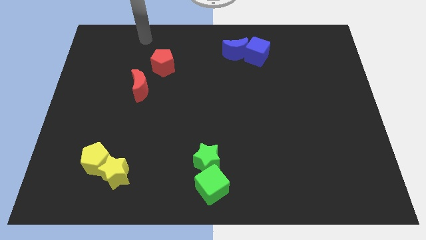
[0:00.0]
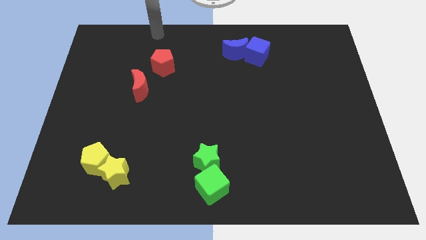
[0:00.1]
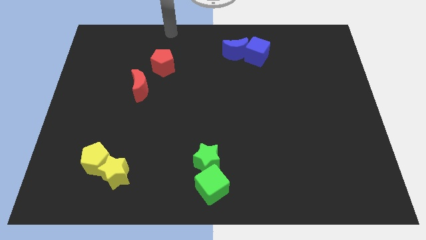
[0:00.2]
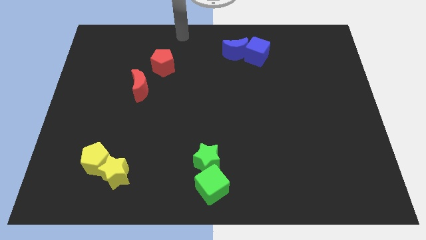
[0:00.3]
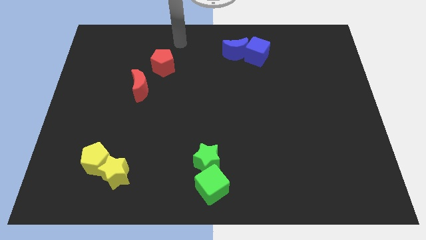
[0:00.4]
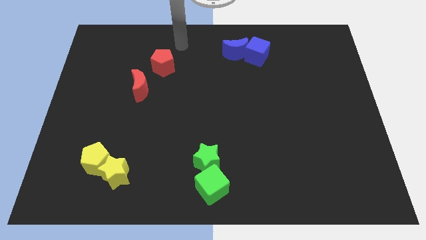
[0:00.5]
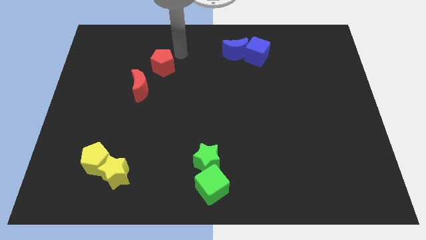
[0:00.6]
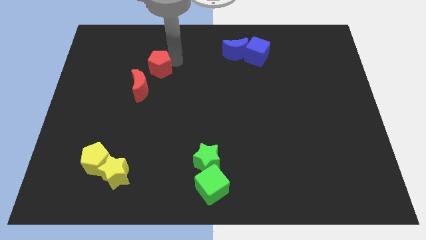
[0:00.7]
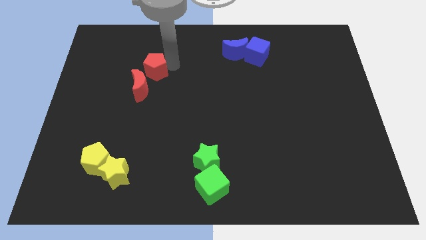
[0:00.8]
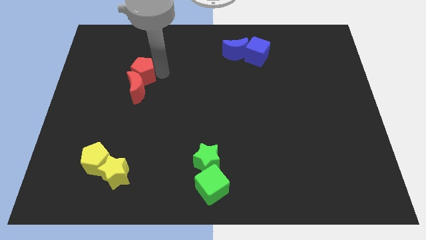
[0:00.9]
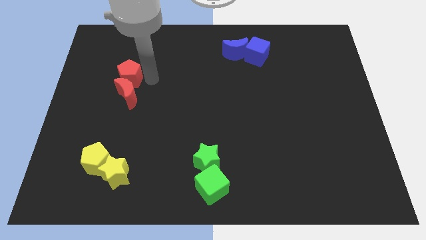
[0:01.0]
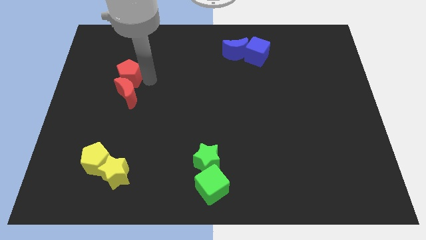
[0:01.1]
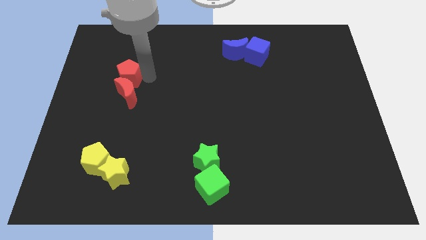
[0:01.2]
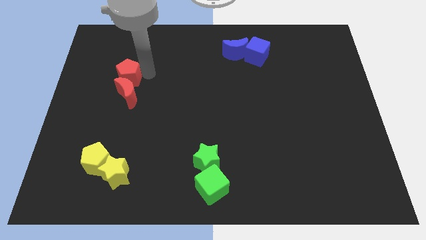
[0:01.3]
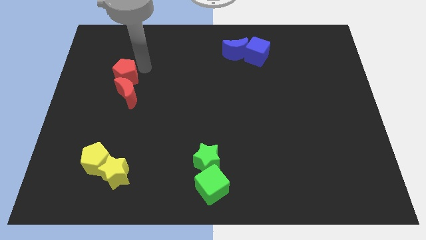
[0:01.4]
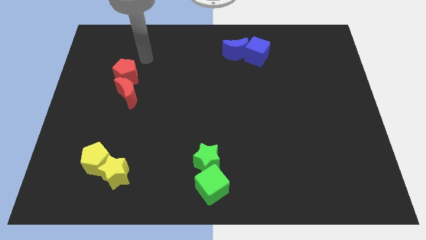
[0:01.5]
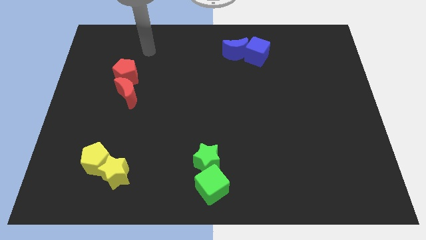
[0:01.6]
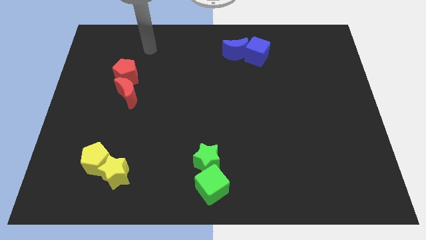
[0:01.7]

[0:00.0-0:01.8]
push the red pentagon into the red moon

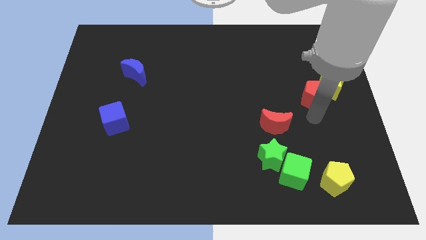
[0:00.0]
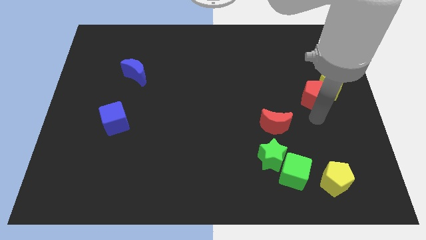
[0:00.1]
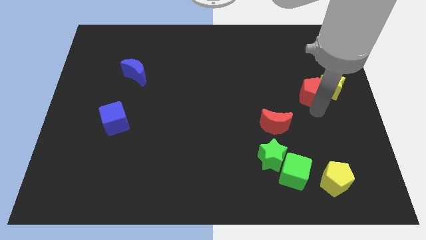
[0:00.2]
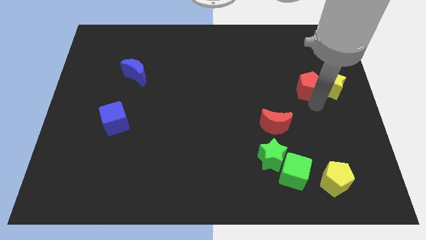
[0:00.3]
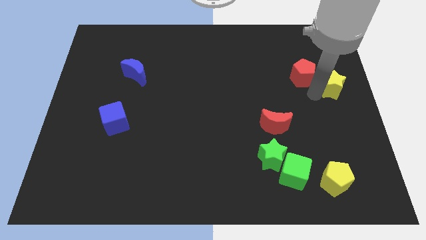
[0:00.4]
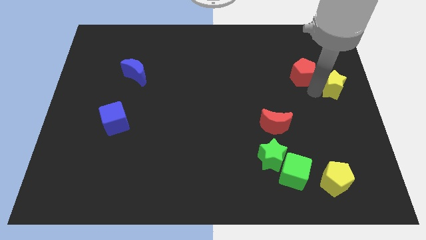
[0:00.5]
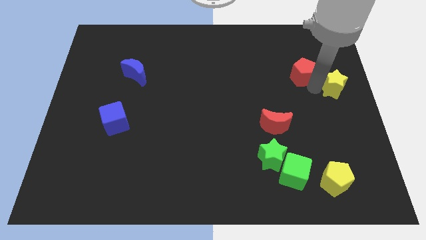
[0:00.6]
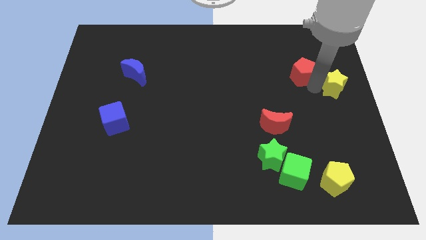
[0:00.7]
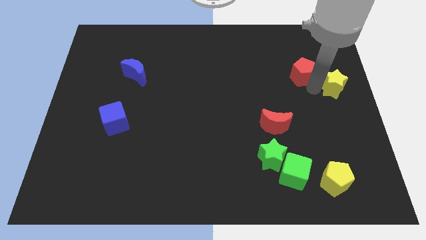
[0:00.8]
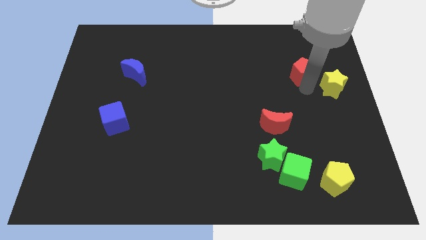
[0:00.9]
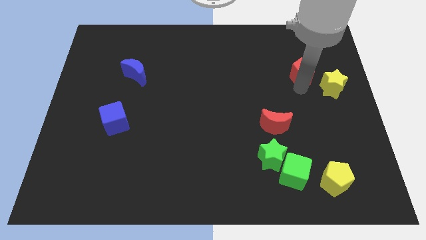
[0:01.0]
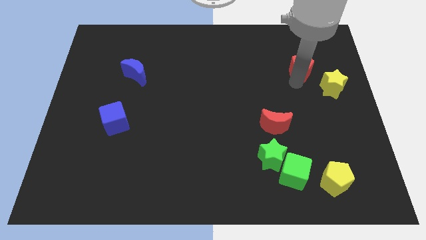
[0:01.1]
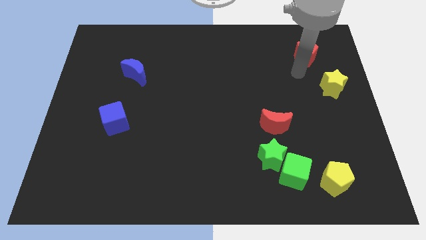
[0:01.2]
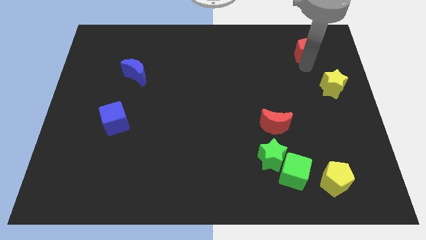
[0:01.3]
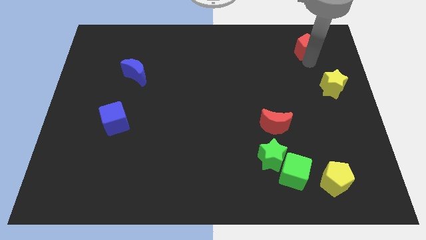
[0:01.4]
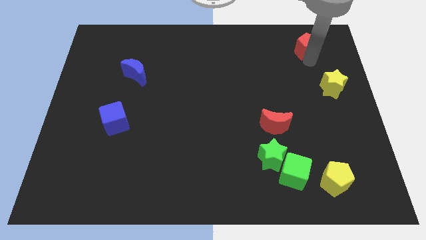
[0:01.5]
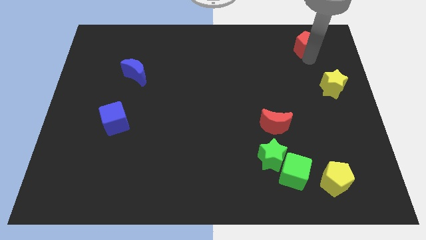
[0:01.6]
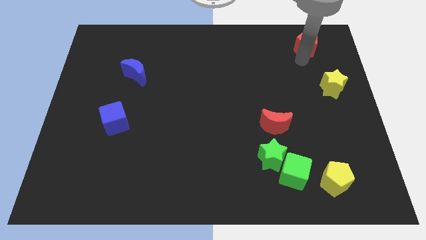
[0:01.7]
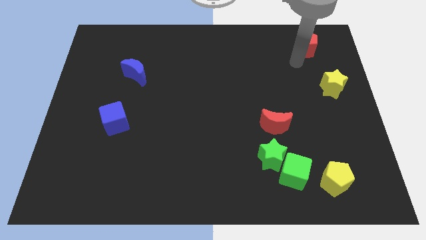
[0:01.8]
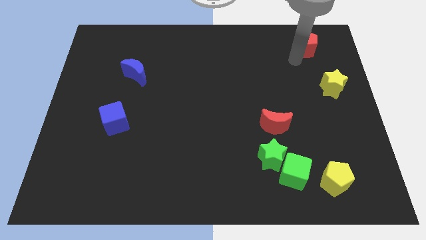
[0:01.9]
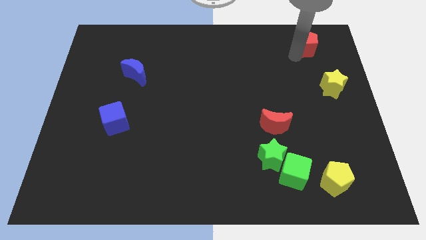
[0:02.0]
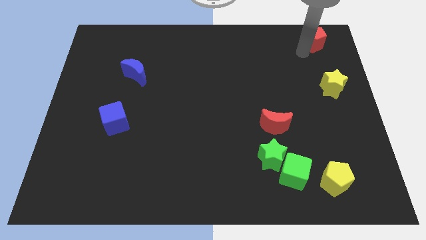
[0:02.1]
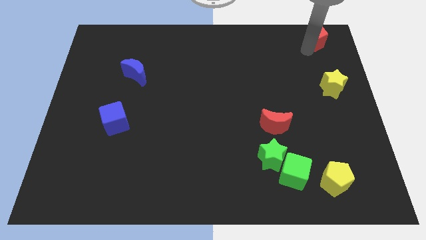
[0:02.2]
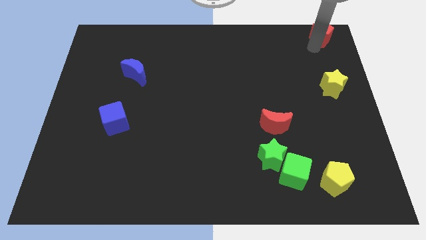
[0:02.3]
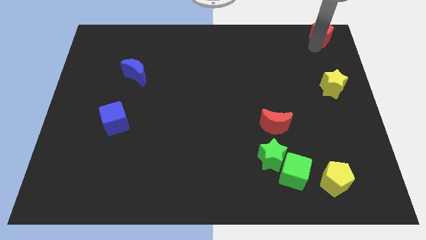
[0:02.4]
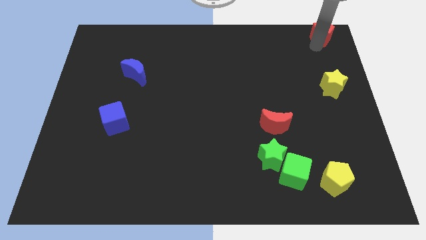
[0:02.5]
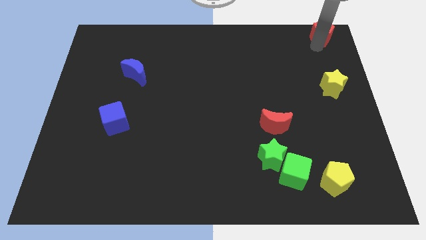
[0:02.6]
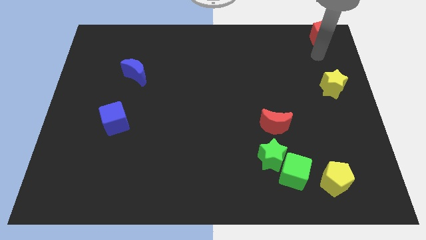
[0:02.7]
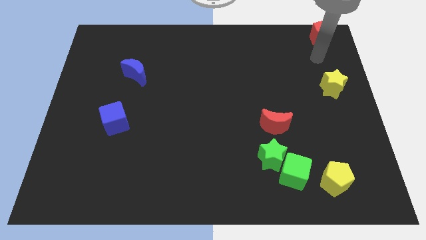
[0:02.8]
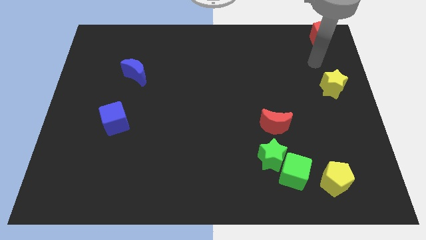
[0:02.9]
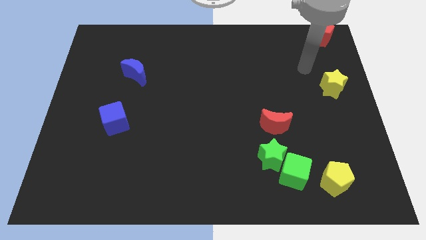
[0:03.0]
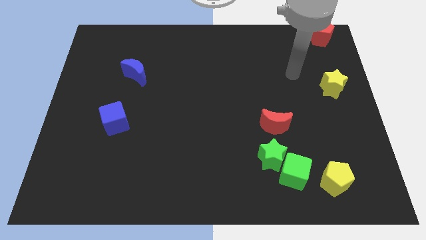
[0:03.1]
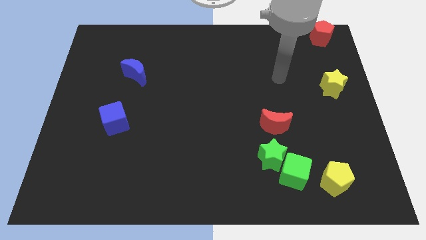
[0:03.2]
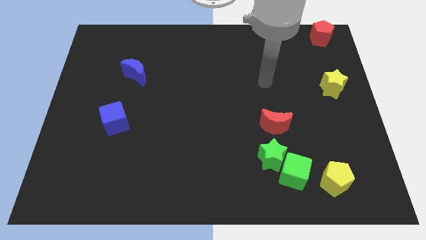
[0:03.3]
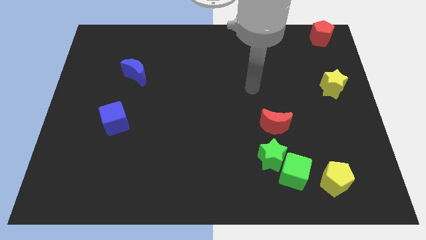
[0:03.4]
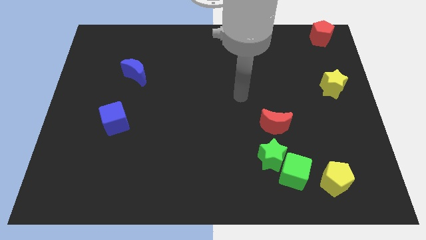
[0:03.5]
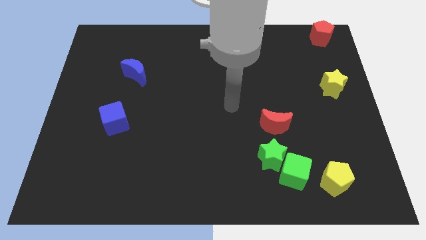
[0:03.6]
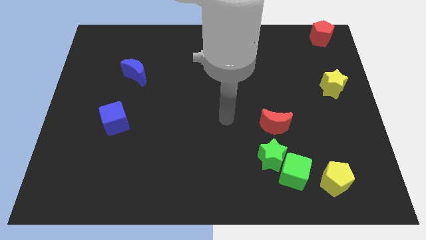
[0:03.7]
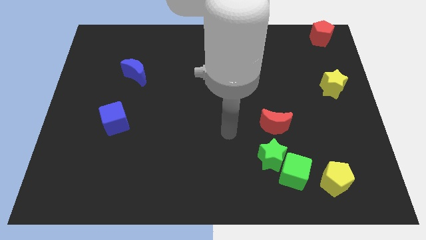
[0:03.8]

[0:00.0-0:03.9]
move the red pentagon to the top right corner of the board

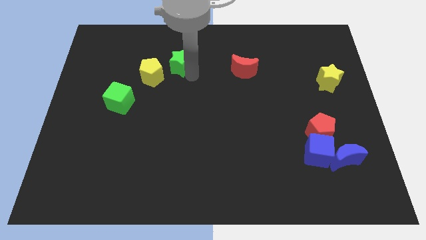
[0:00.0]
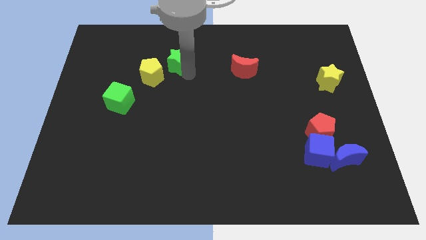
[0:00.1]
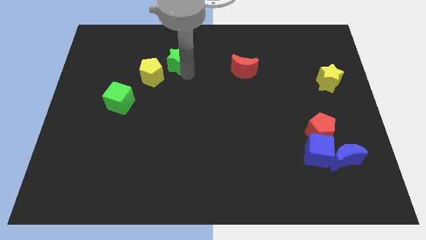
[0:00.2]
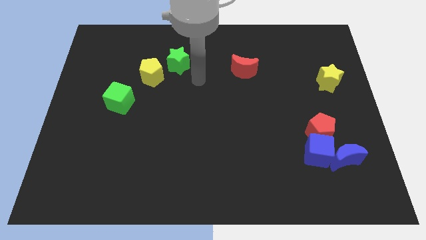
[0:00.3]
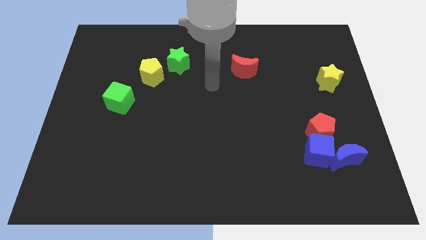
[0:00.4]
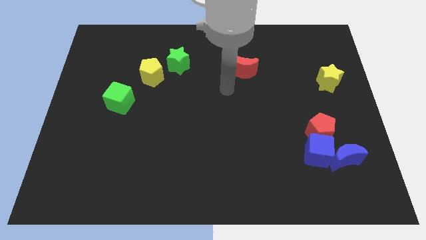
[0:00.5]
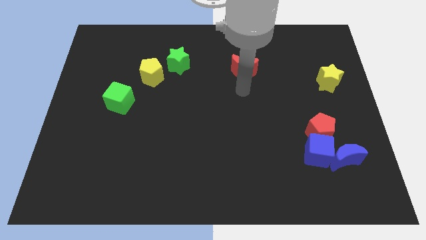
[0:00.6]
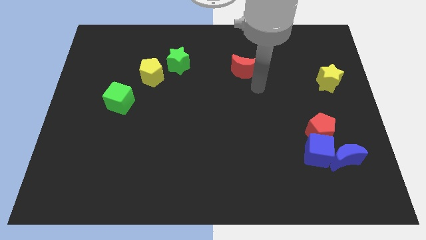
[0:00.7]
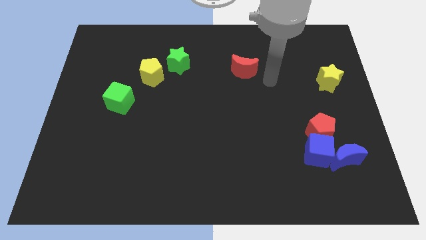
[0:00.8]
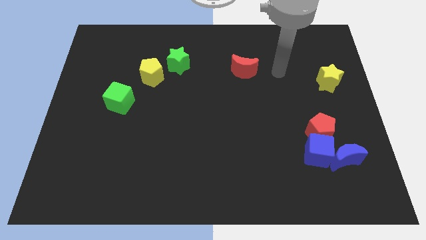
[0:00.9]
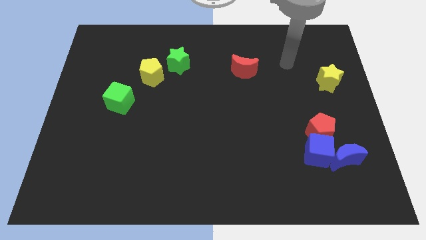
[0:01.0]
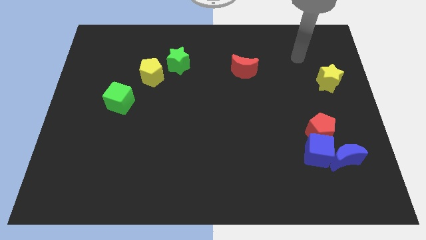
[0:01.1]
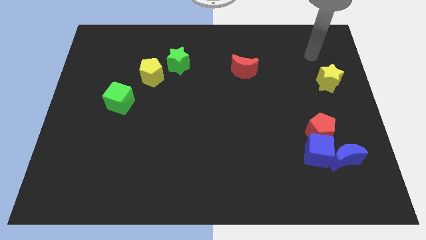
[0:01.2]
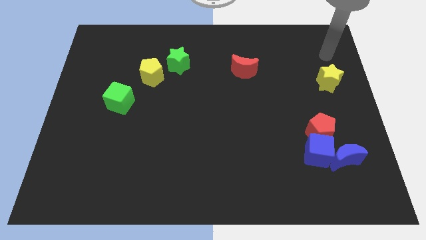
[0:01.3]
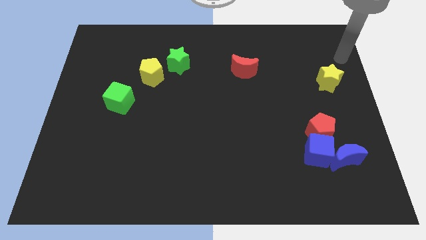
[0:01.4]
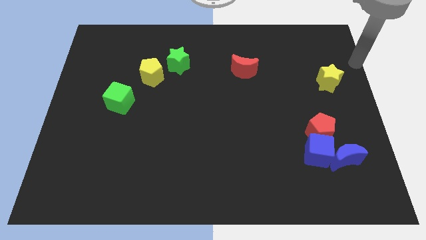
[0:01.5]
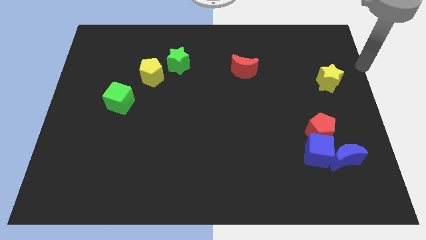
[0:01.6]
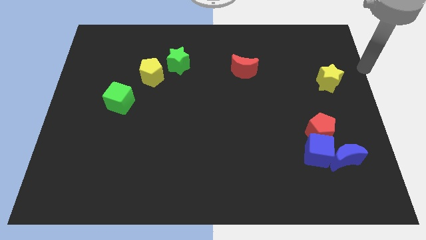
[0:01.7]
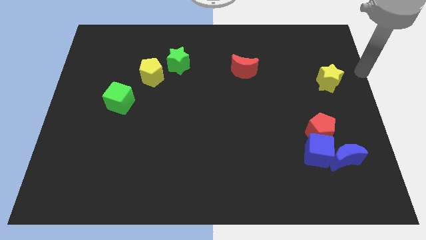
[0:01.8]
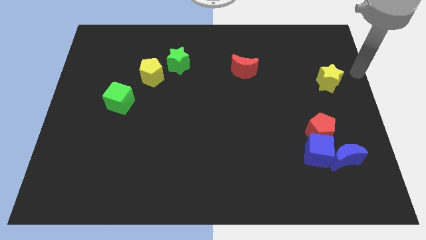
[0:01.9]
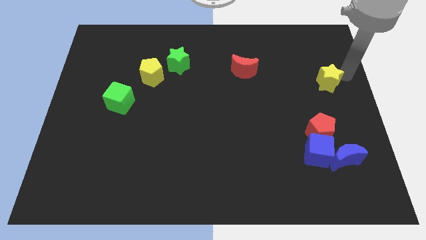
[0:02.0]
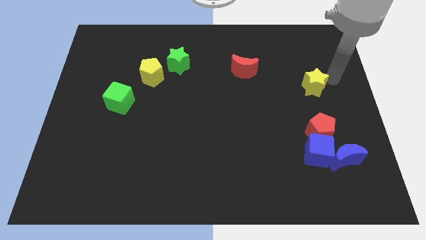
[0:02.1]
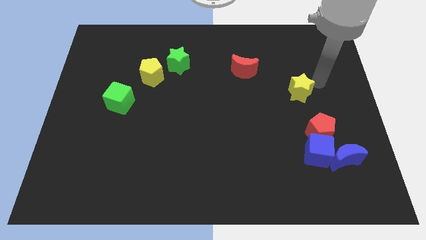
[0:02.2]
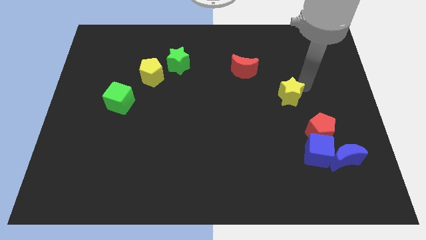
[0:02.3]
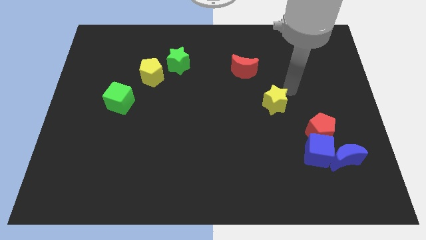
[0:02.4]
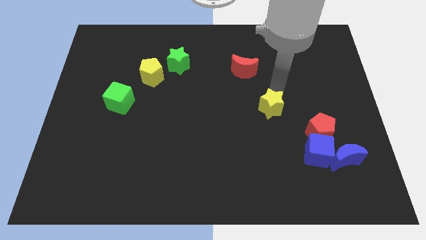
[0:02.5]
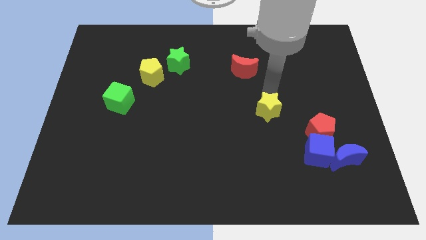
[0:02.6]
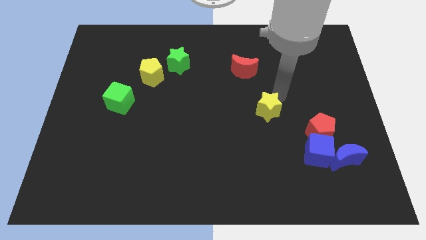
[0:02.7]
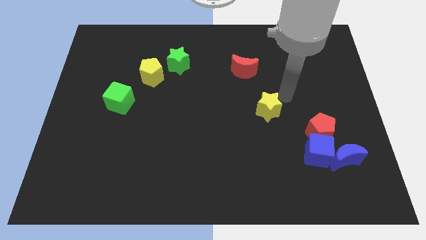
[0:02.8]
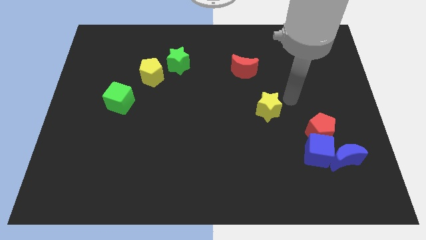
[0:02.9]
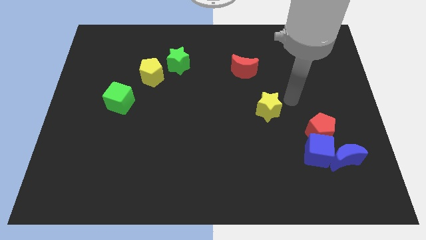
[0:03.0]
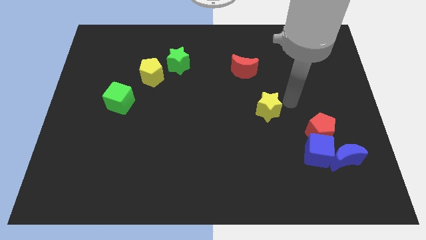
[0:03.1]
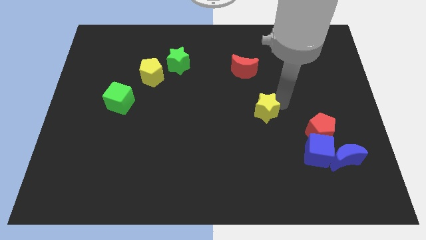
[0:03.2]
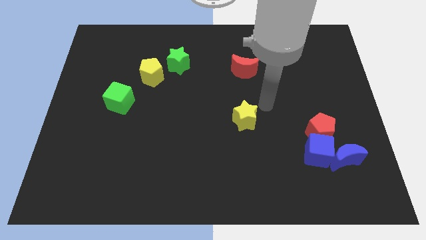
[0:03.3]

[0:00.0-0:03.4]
move the yellow star below the red moon
